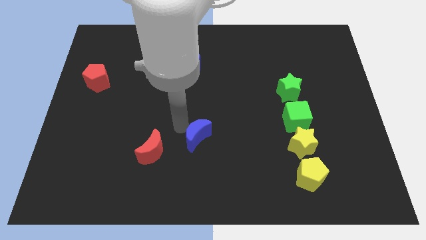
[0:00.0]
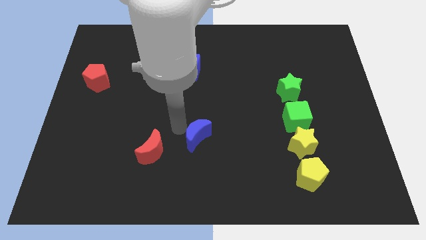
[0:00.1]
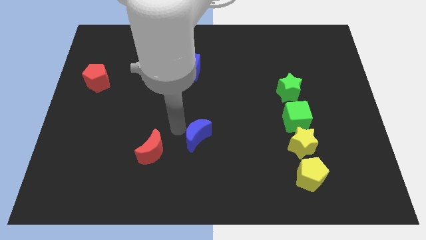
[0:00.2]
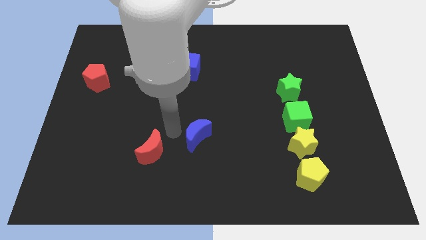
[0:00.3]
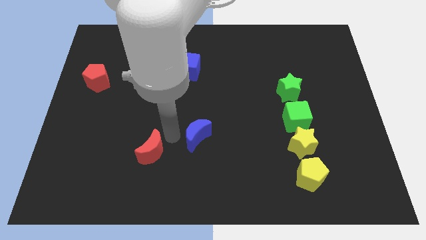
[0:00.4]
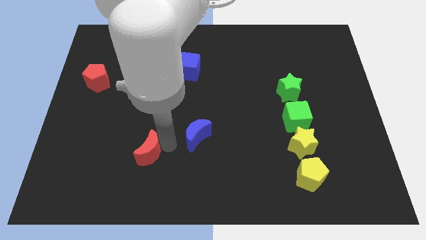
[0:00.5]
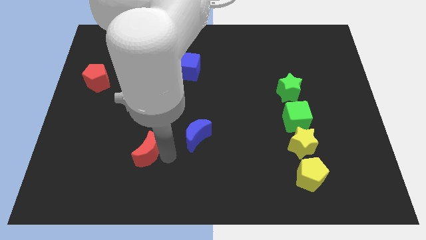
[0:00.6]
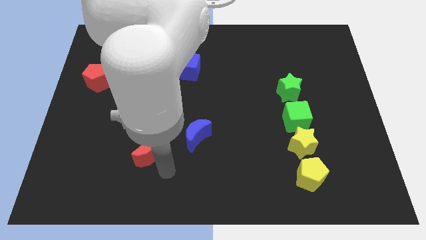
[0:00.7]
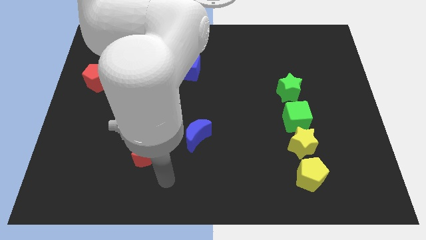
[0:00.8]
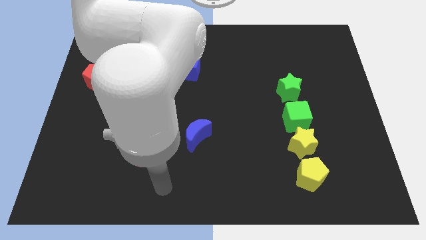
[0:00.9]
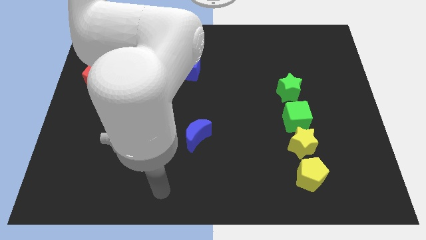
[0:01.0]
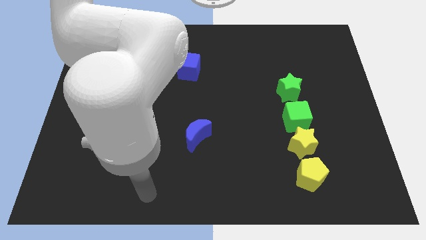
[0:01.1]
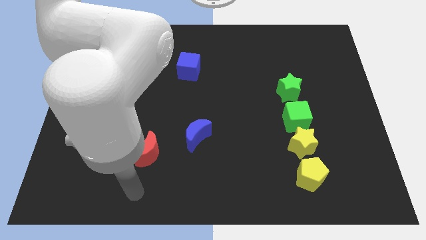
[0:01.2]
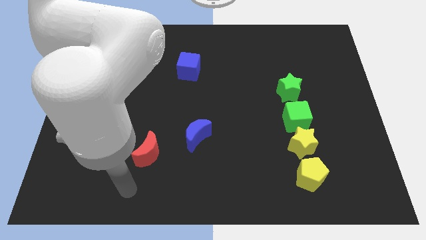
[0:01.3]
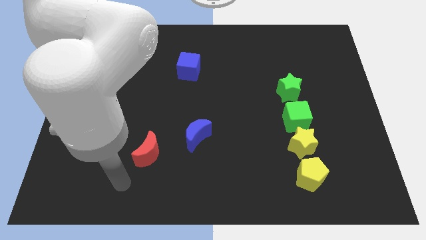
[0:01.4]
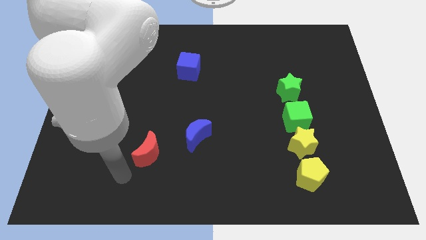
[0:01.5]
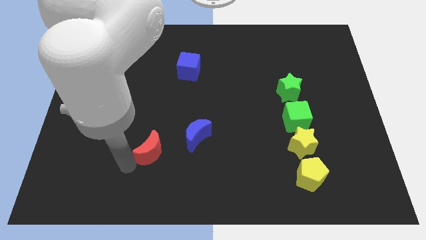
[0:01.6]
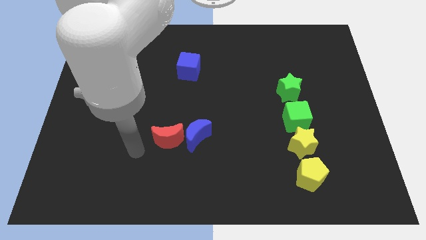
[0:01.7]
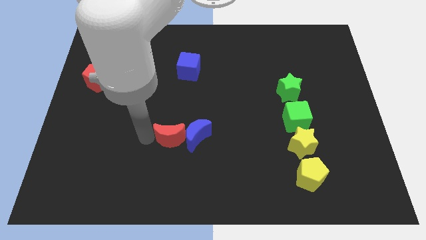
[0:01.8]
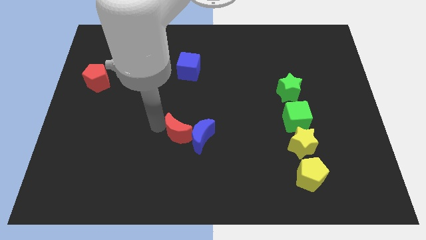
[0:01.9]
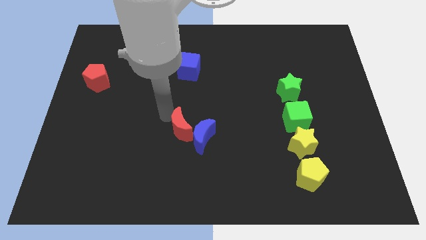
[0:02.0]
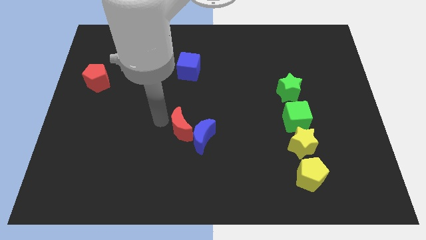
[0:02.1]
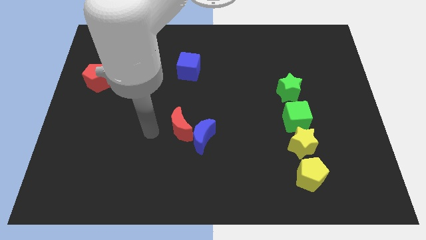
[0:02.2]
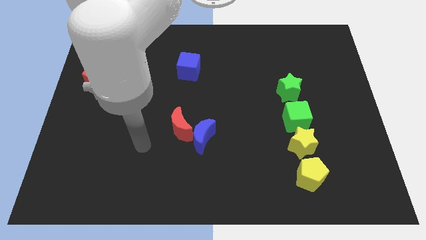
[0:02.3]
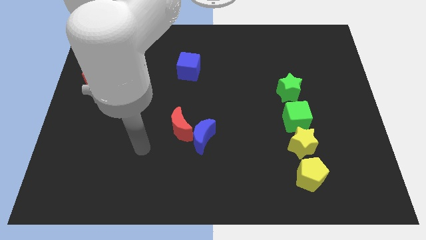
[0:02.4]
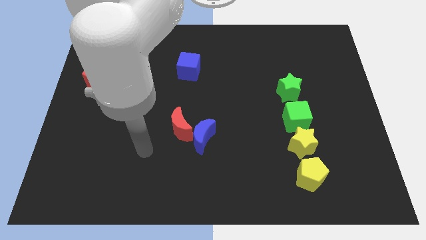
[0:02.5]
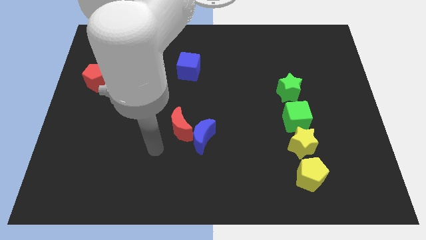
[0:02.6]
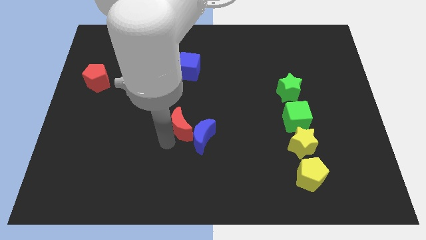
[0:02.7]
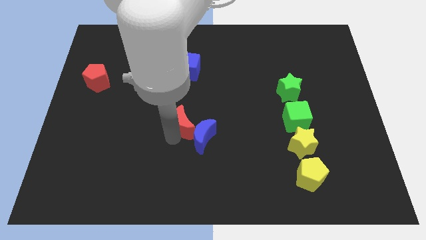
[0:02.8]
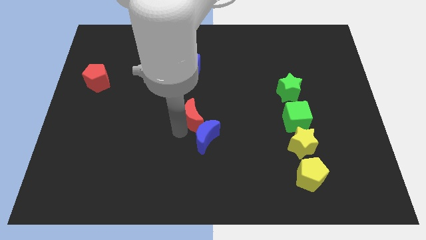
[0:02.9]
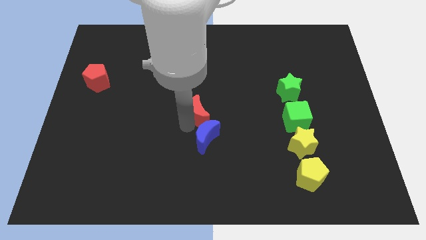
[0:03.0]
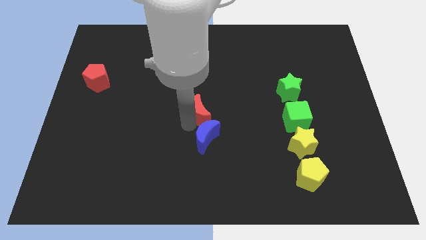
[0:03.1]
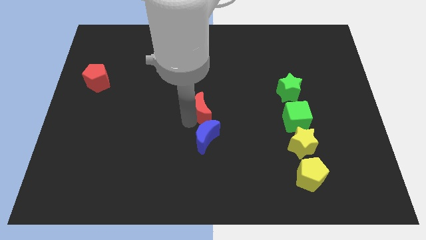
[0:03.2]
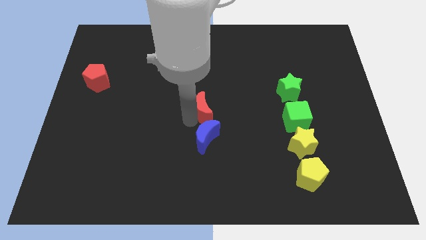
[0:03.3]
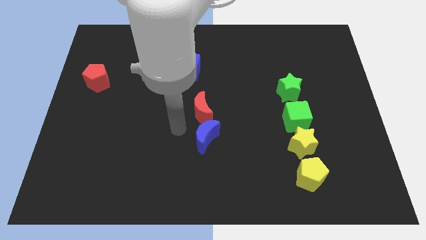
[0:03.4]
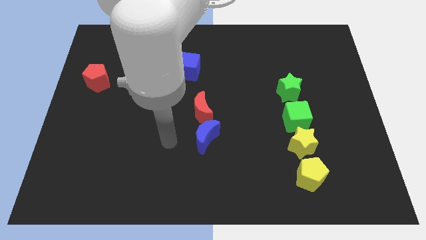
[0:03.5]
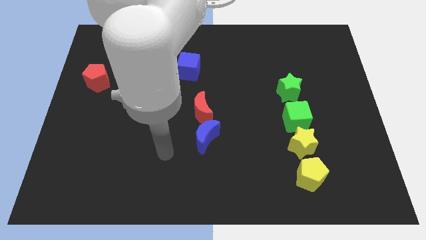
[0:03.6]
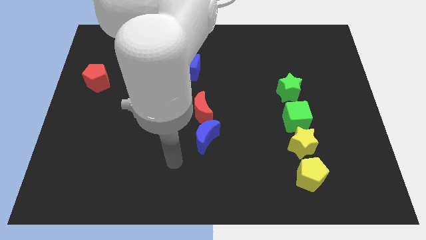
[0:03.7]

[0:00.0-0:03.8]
place the red moon above the blue moon

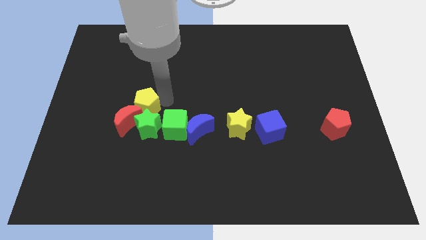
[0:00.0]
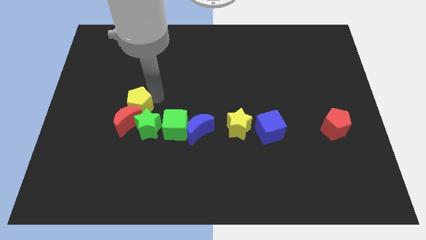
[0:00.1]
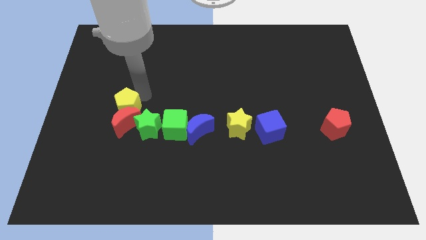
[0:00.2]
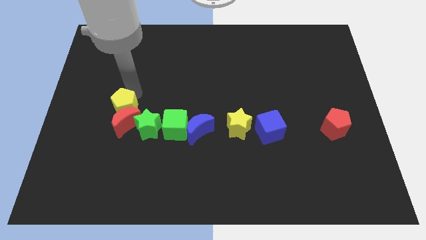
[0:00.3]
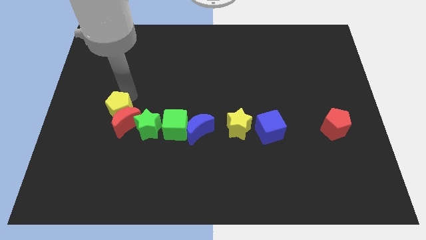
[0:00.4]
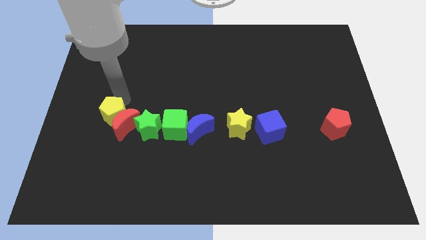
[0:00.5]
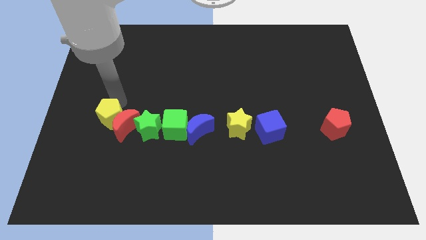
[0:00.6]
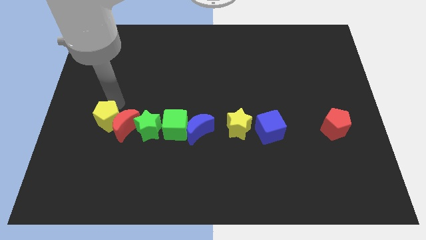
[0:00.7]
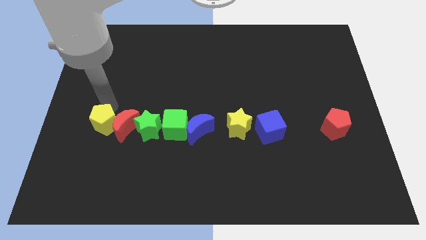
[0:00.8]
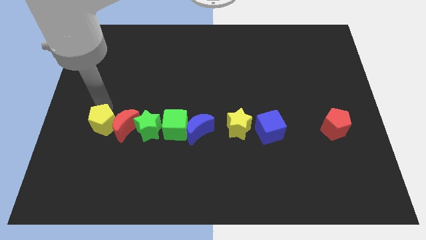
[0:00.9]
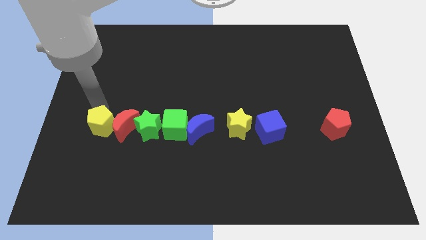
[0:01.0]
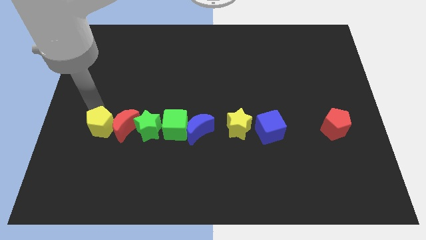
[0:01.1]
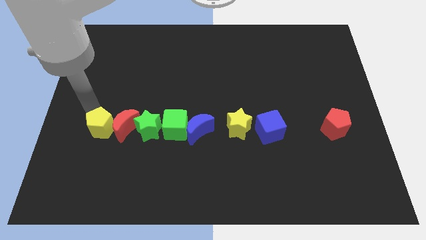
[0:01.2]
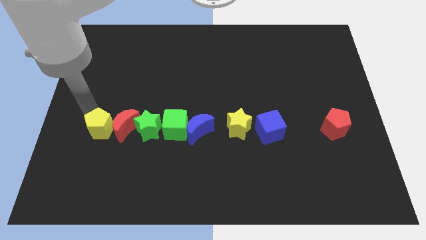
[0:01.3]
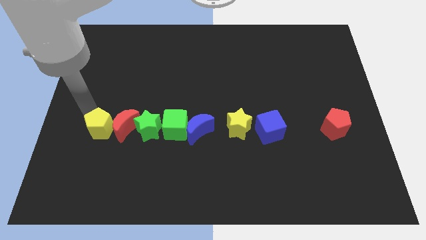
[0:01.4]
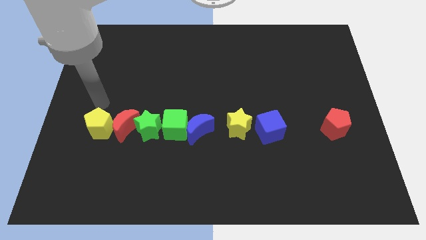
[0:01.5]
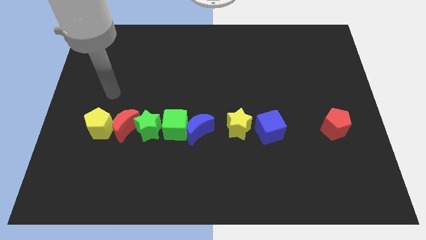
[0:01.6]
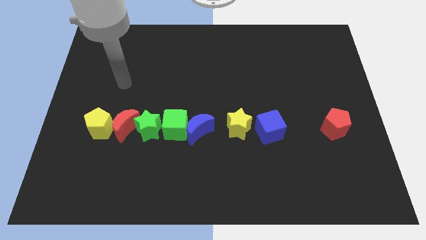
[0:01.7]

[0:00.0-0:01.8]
push the yellow pentagon to the left side of the red crescent

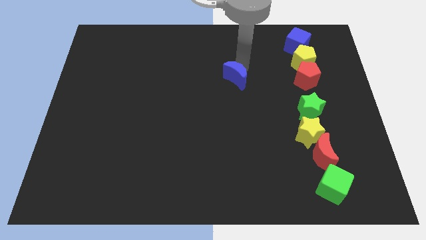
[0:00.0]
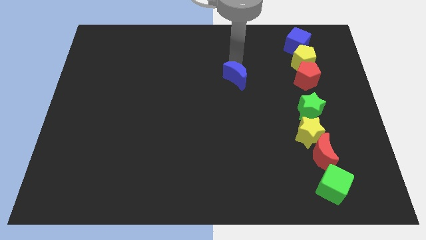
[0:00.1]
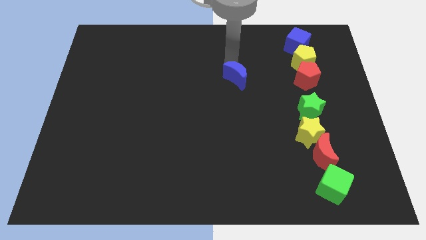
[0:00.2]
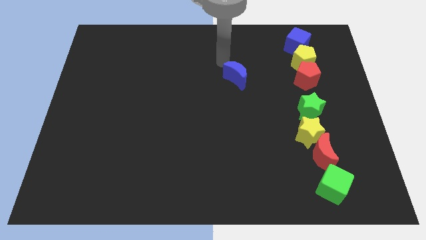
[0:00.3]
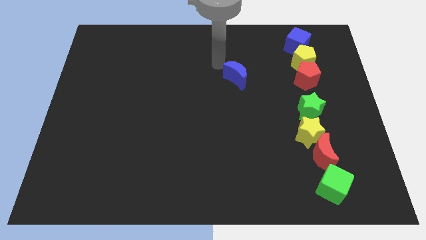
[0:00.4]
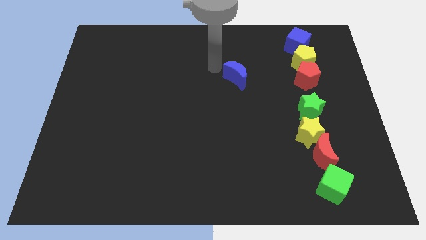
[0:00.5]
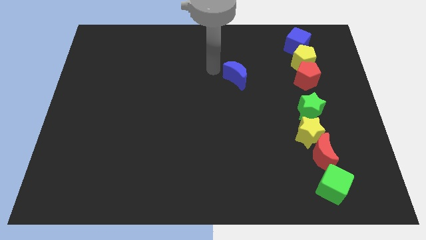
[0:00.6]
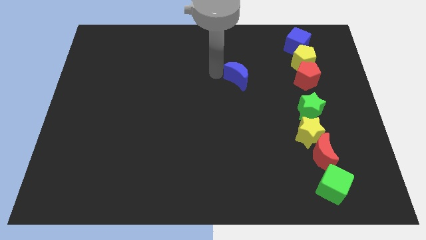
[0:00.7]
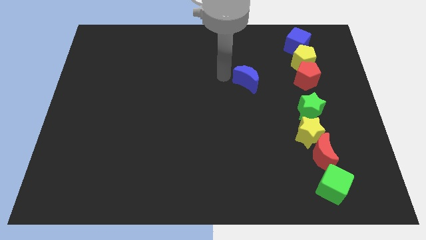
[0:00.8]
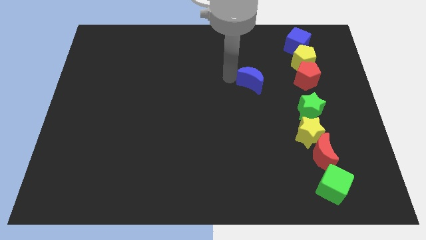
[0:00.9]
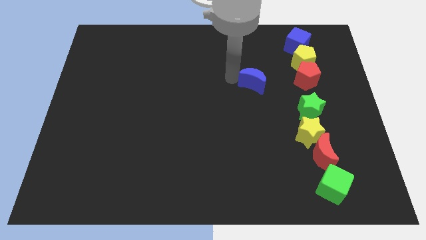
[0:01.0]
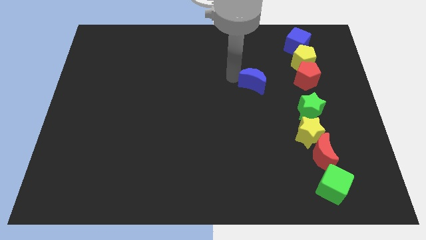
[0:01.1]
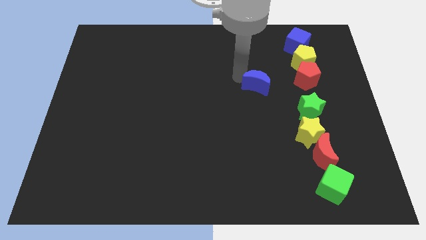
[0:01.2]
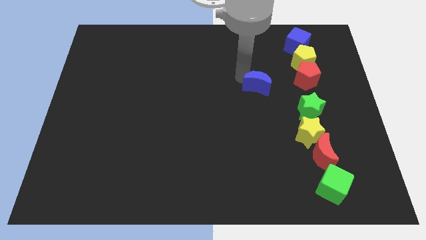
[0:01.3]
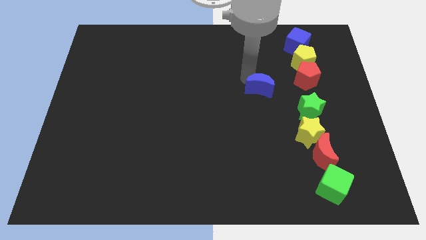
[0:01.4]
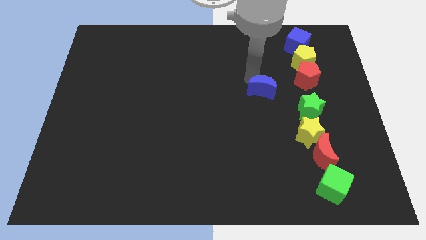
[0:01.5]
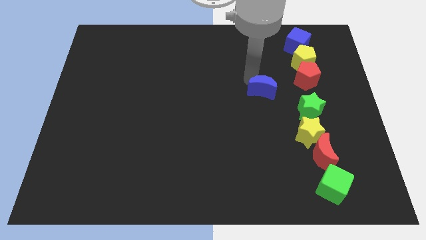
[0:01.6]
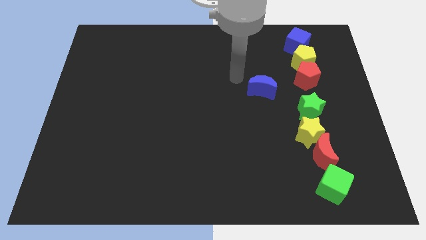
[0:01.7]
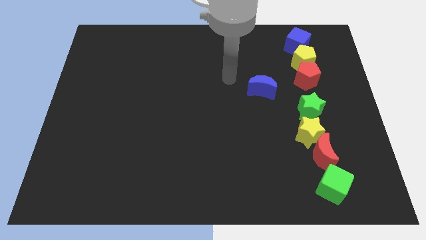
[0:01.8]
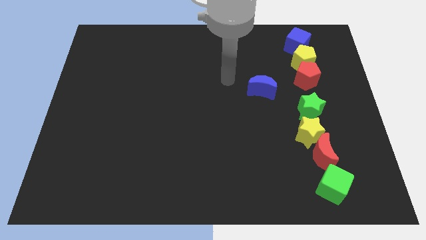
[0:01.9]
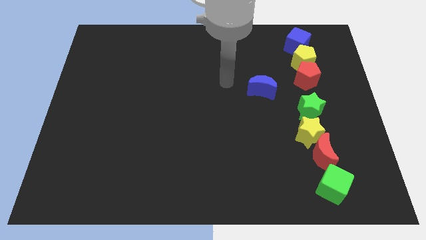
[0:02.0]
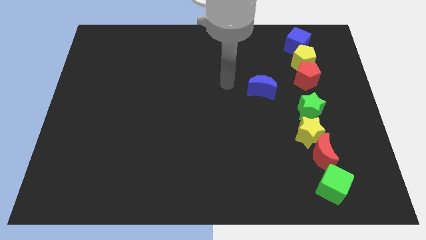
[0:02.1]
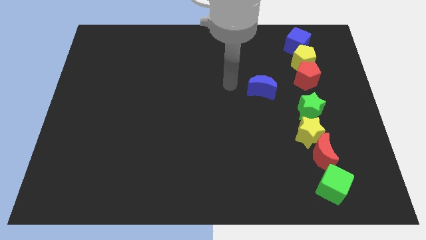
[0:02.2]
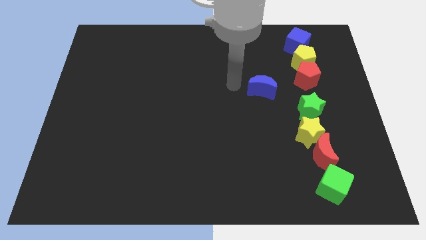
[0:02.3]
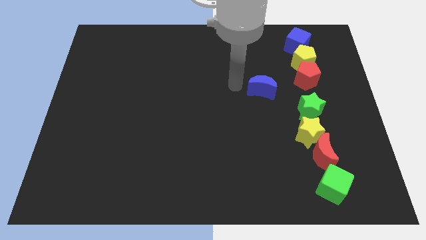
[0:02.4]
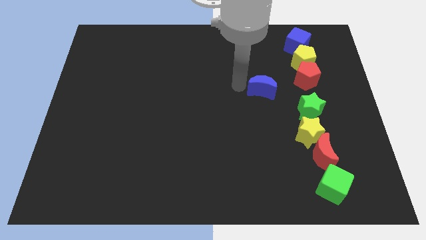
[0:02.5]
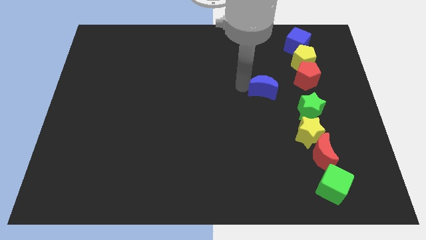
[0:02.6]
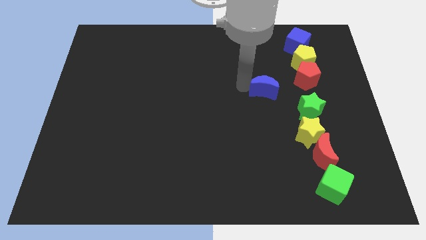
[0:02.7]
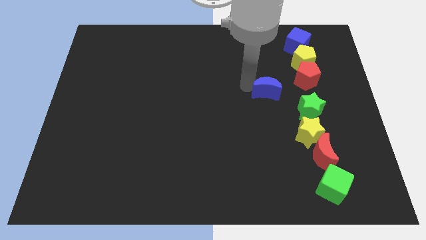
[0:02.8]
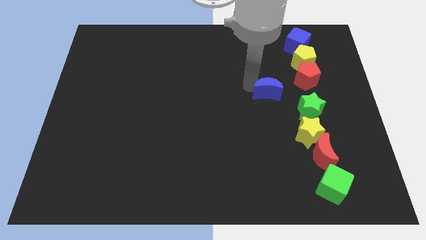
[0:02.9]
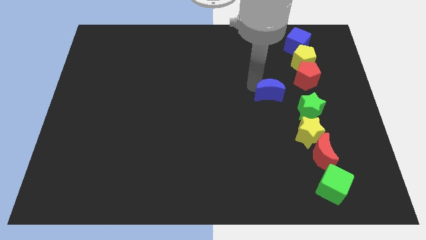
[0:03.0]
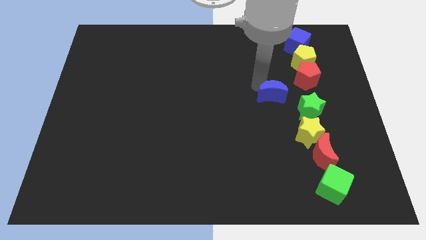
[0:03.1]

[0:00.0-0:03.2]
push blue crescent towards green star

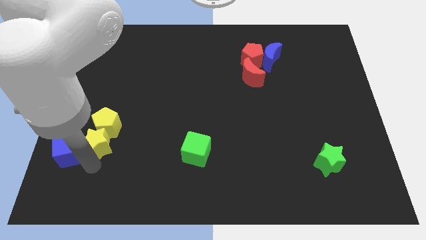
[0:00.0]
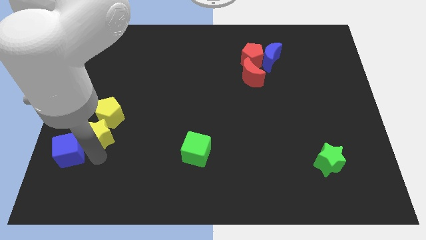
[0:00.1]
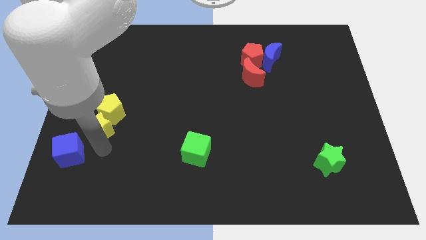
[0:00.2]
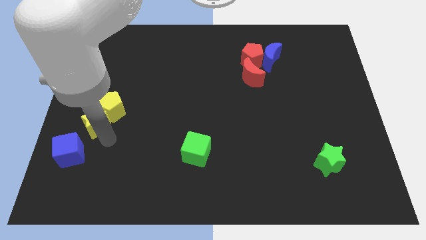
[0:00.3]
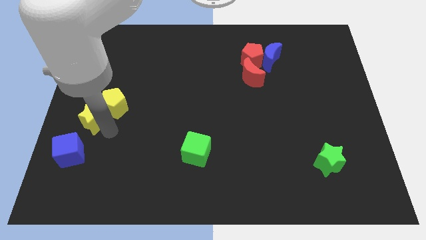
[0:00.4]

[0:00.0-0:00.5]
push the yellow blocks above the blue cube
